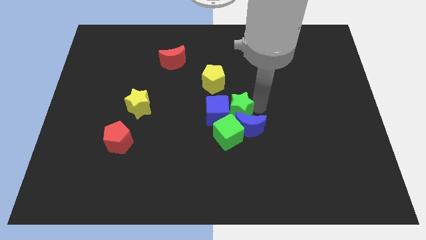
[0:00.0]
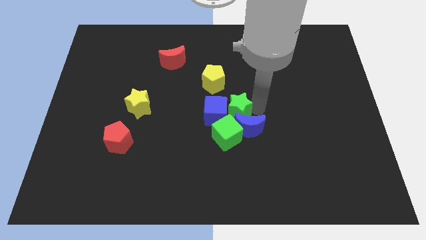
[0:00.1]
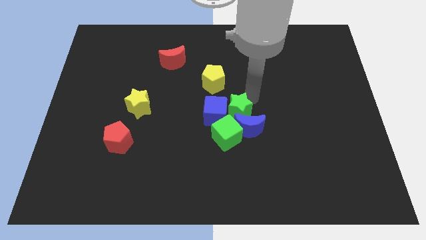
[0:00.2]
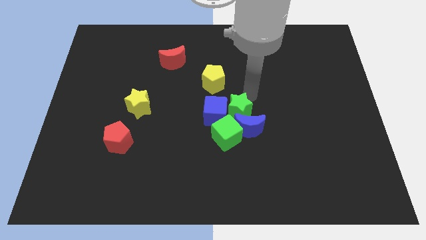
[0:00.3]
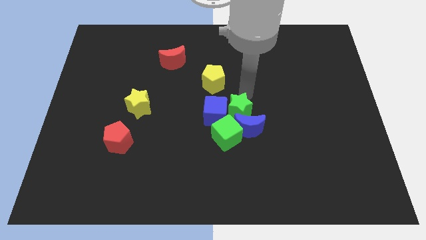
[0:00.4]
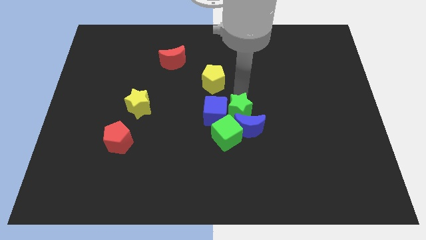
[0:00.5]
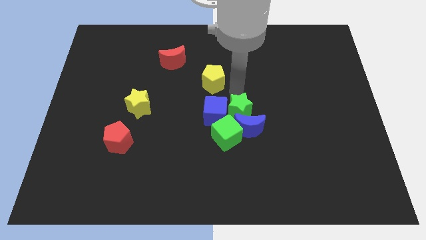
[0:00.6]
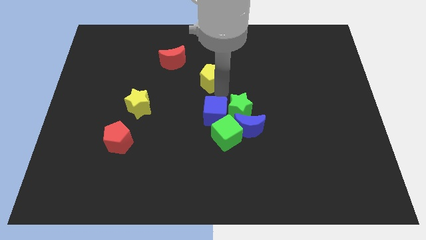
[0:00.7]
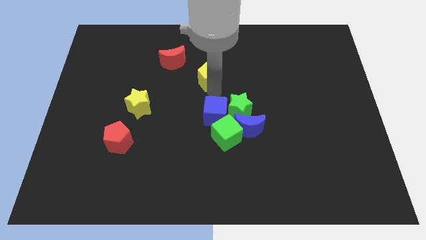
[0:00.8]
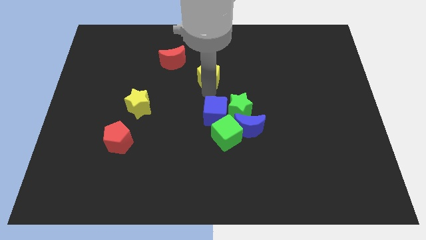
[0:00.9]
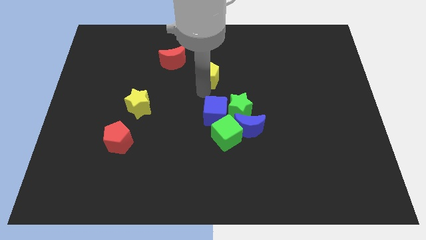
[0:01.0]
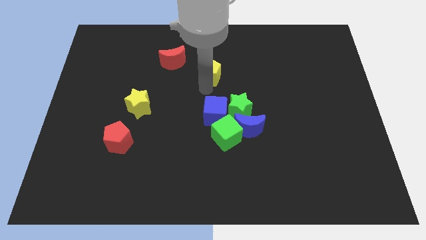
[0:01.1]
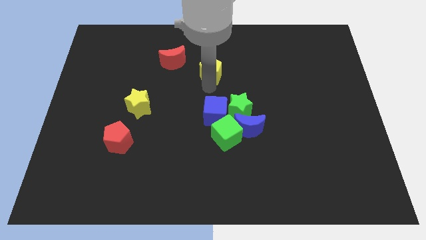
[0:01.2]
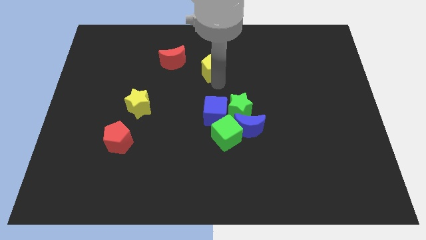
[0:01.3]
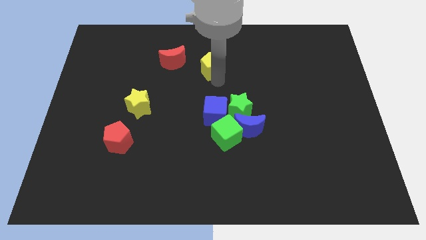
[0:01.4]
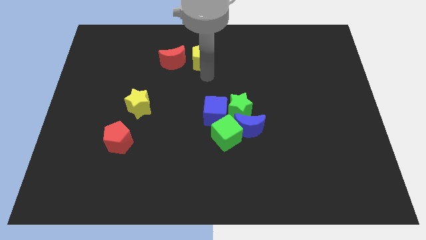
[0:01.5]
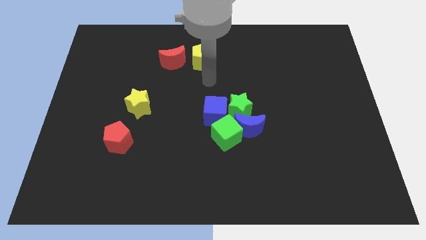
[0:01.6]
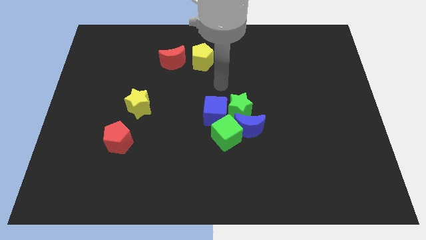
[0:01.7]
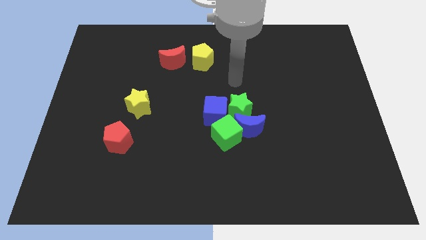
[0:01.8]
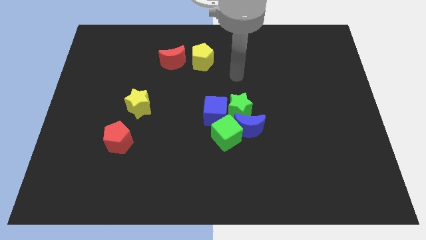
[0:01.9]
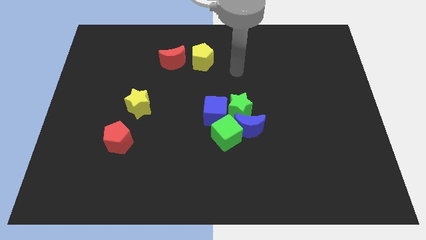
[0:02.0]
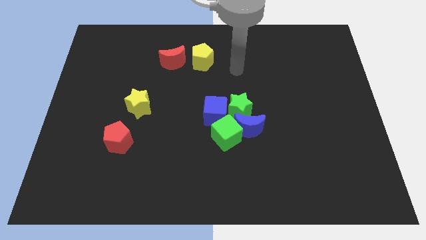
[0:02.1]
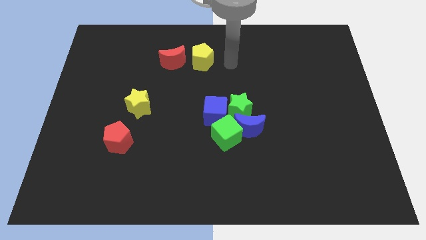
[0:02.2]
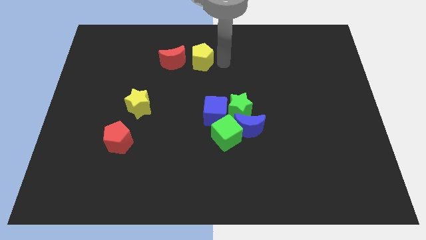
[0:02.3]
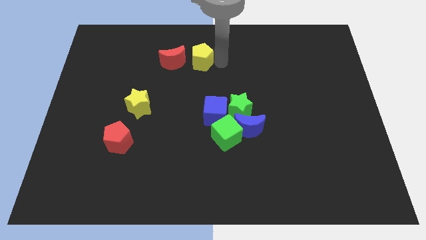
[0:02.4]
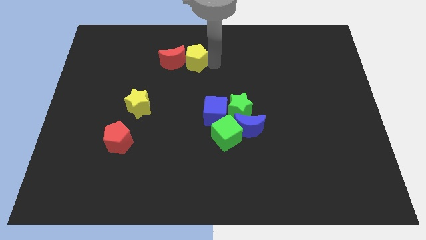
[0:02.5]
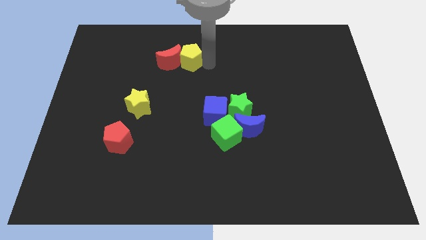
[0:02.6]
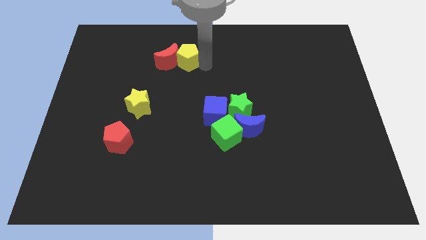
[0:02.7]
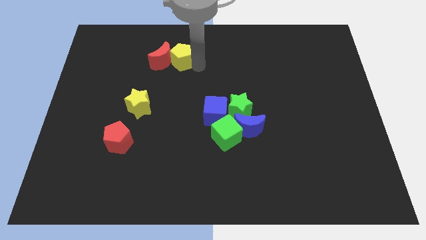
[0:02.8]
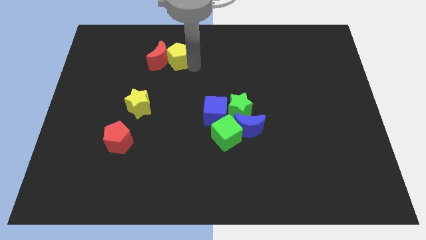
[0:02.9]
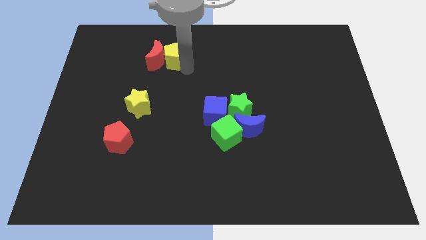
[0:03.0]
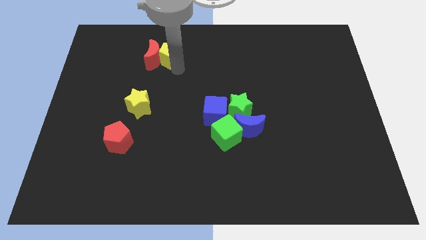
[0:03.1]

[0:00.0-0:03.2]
place yellow pentagon right to red moon

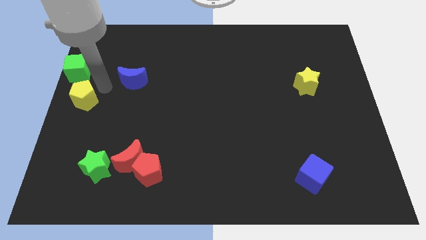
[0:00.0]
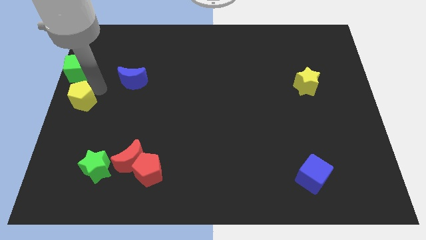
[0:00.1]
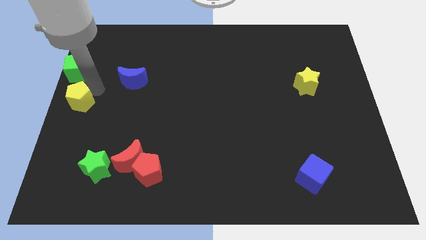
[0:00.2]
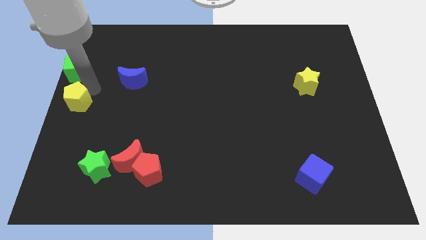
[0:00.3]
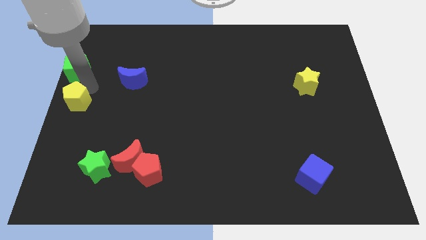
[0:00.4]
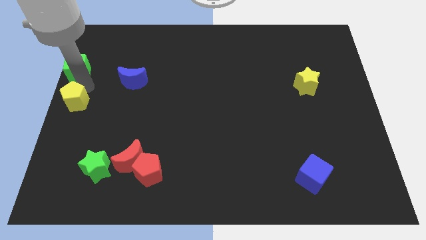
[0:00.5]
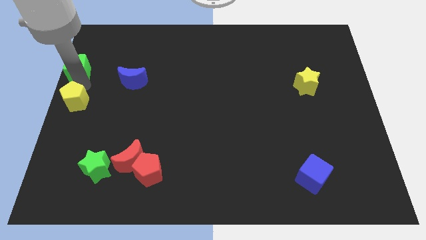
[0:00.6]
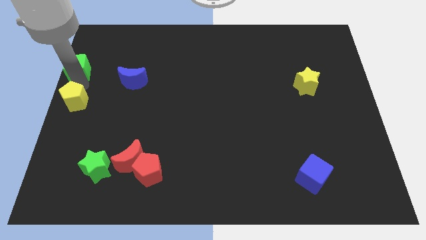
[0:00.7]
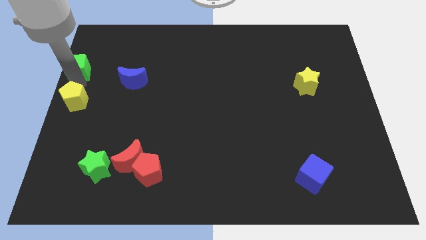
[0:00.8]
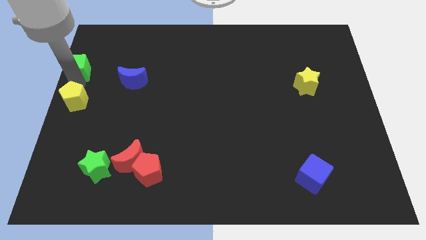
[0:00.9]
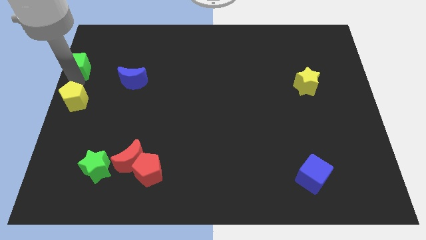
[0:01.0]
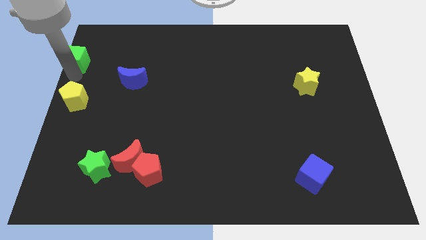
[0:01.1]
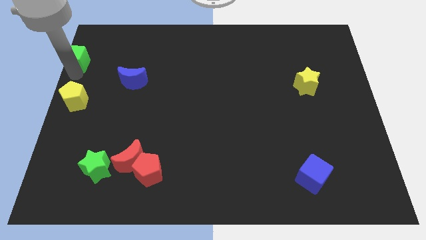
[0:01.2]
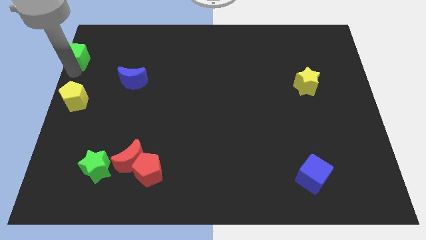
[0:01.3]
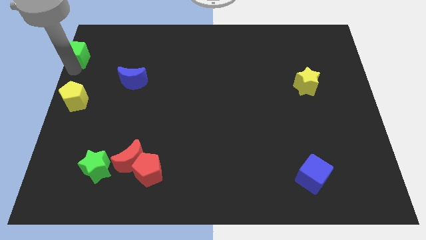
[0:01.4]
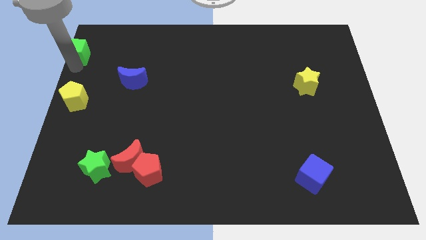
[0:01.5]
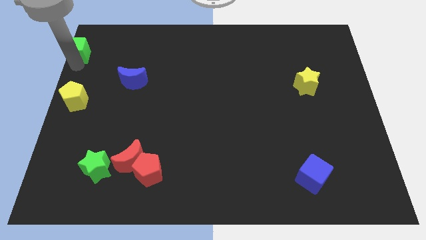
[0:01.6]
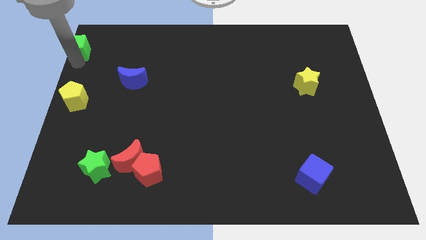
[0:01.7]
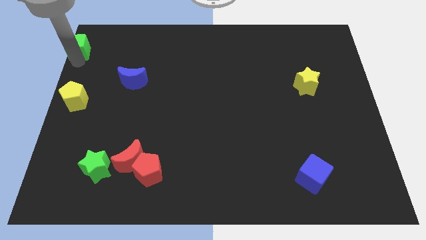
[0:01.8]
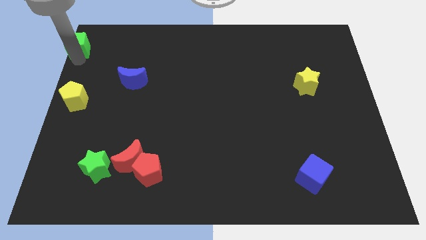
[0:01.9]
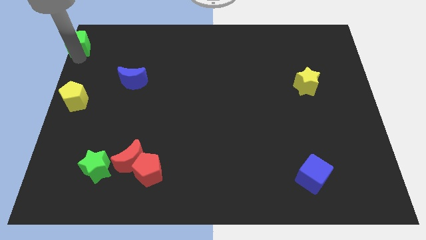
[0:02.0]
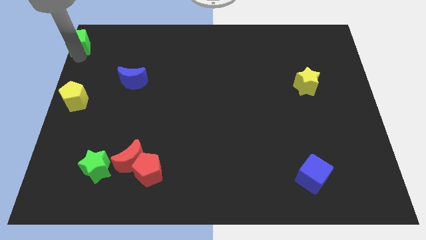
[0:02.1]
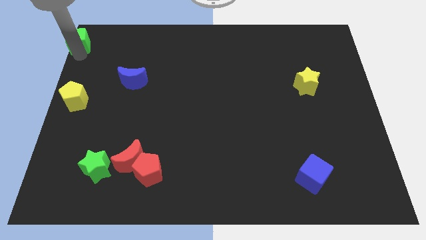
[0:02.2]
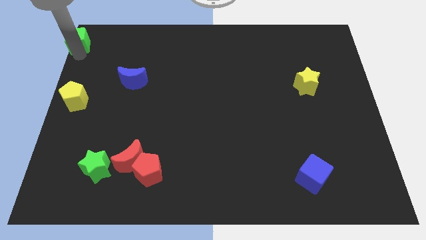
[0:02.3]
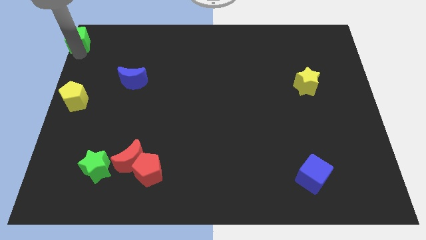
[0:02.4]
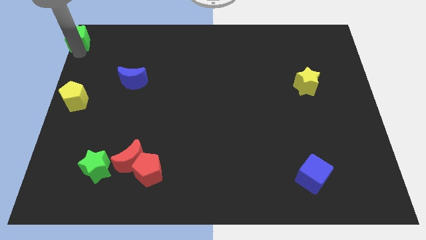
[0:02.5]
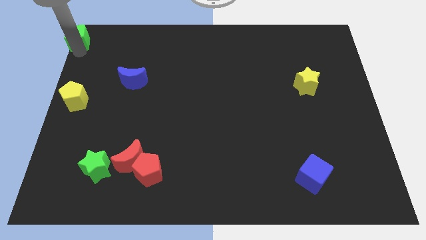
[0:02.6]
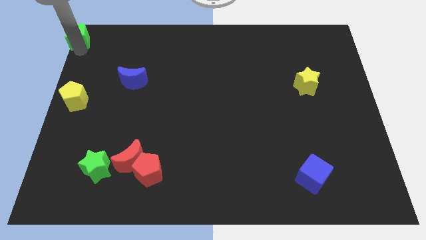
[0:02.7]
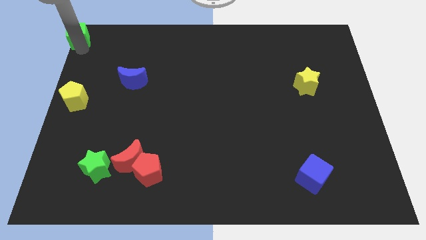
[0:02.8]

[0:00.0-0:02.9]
place green cube towards top left corner

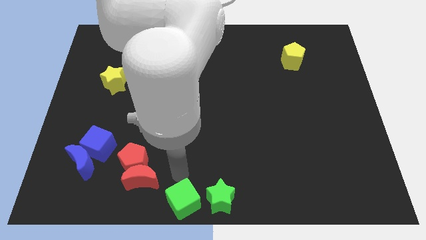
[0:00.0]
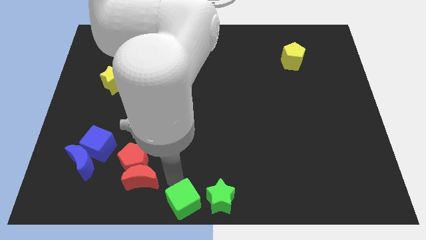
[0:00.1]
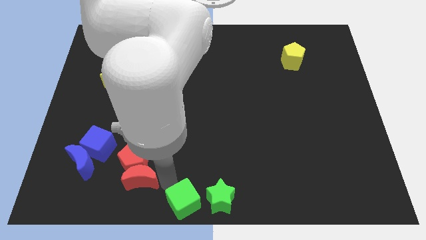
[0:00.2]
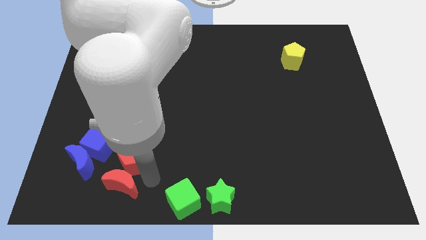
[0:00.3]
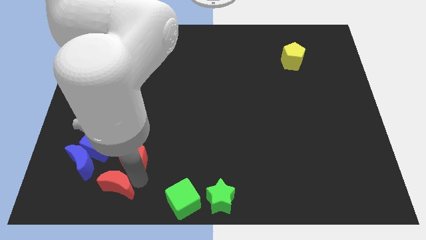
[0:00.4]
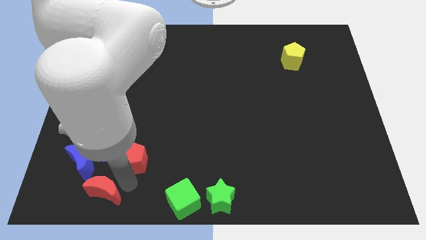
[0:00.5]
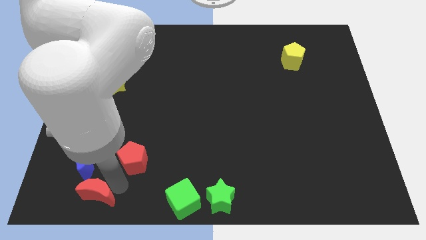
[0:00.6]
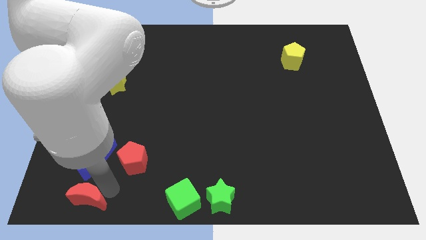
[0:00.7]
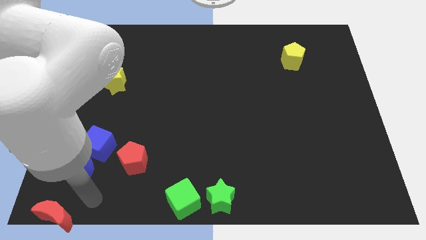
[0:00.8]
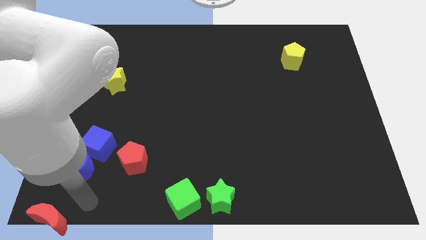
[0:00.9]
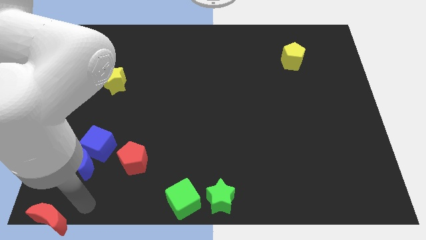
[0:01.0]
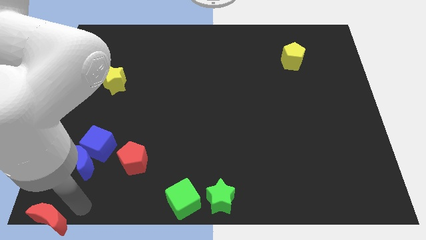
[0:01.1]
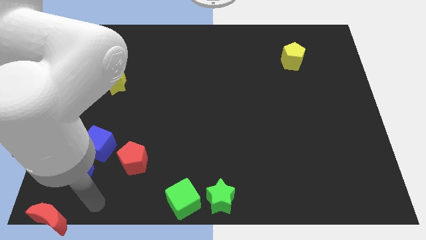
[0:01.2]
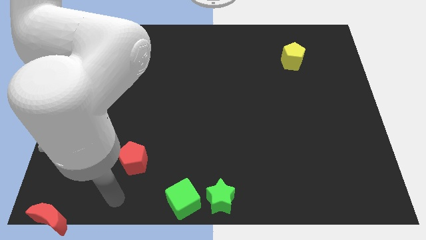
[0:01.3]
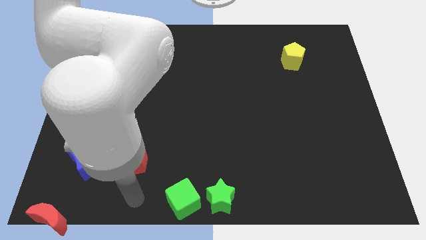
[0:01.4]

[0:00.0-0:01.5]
move the red moon towards the bottom left corner of the board

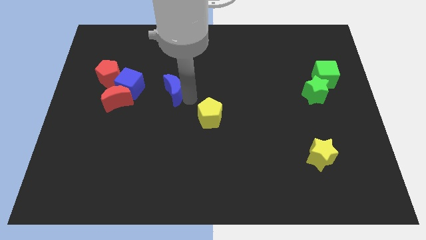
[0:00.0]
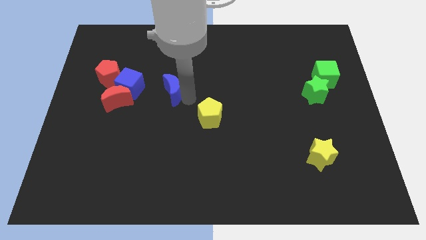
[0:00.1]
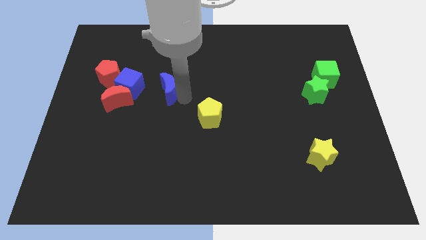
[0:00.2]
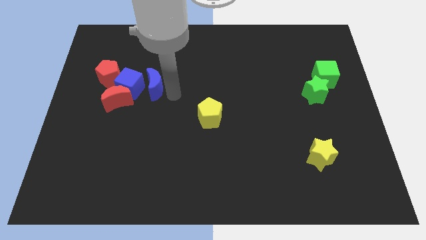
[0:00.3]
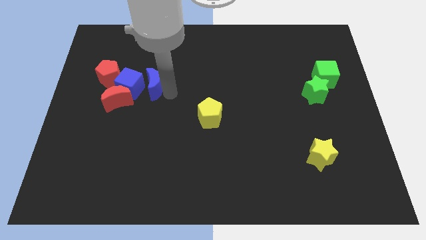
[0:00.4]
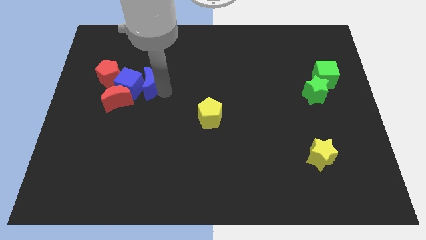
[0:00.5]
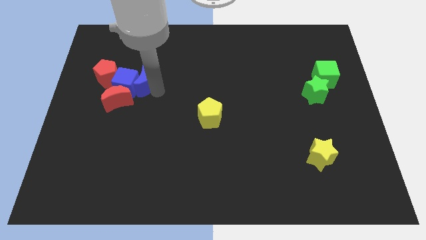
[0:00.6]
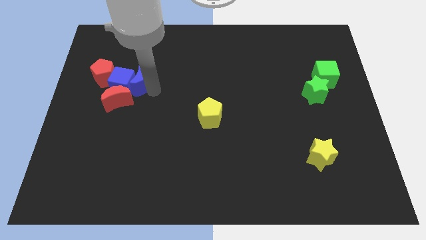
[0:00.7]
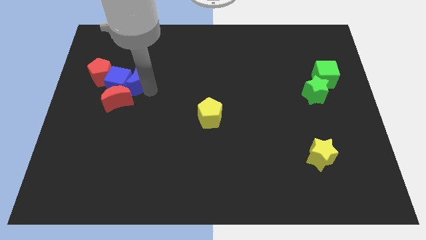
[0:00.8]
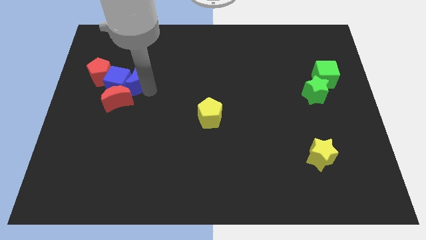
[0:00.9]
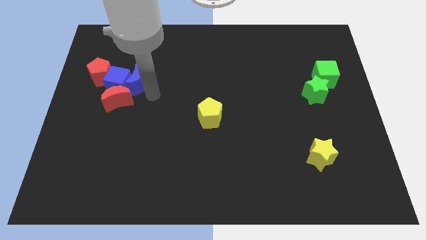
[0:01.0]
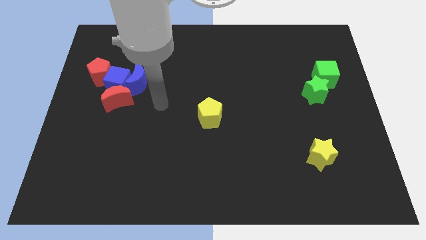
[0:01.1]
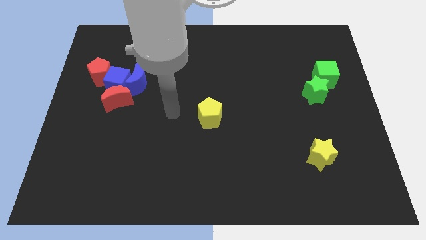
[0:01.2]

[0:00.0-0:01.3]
push the blue moon into the blue cube
